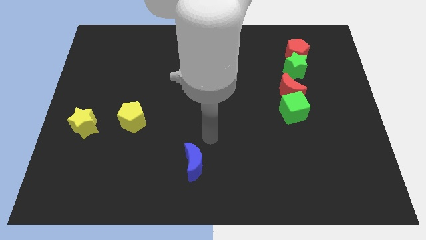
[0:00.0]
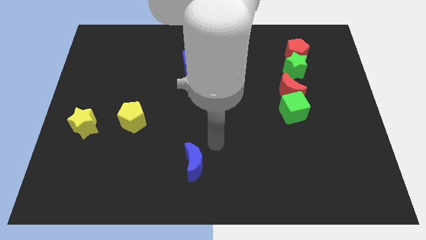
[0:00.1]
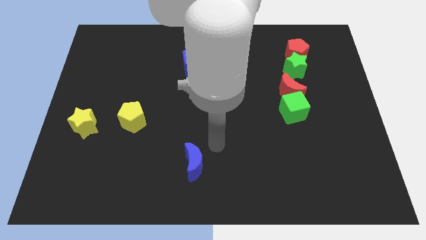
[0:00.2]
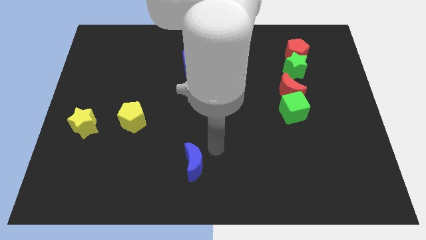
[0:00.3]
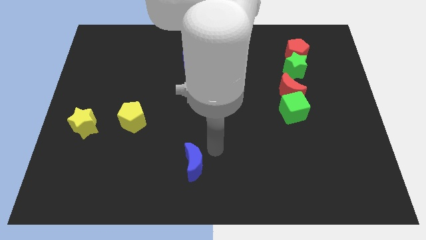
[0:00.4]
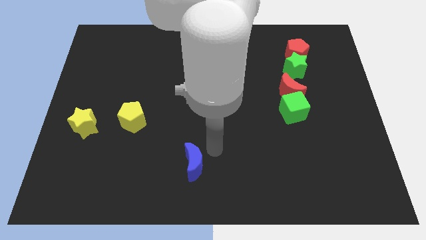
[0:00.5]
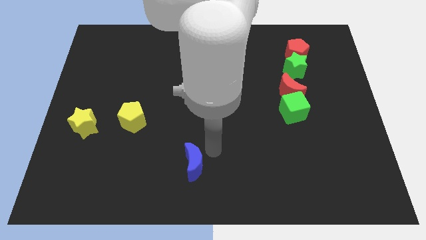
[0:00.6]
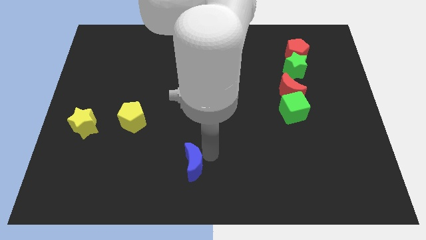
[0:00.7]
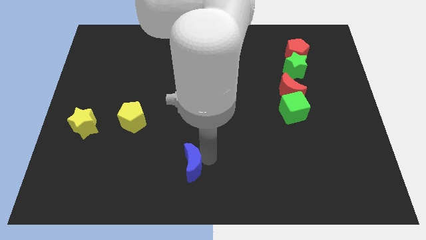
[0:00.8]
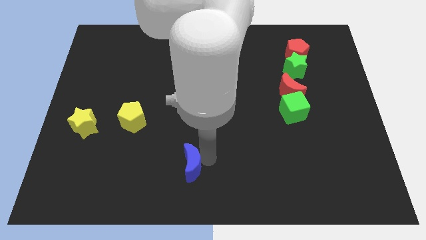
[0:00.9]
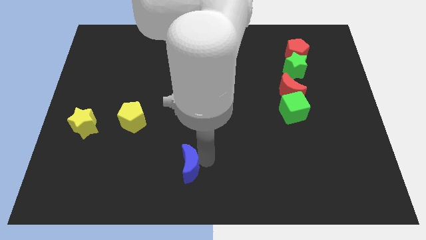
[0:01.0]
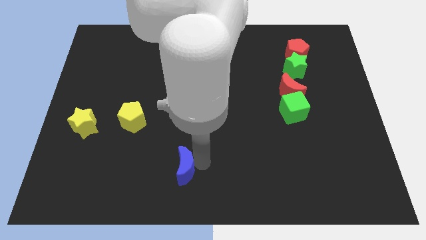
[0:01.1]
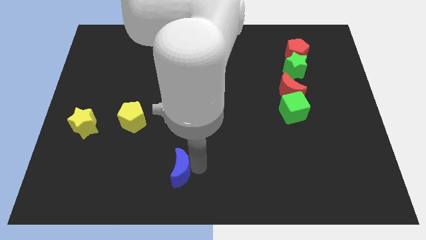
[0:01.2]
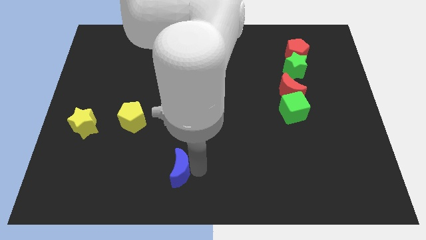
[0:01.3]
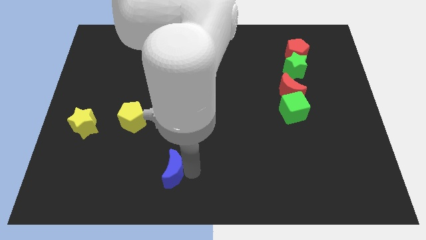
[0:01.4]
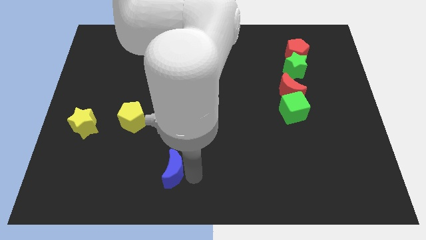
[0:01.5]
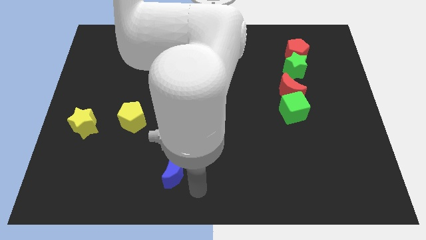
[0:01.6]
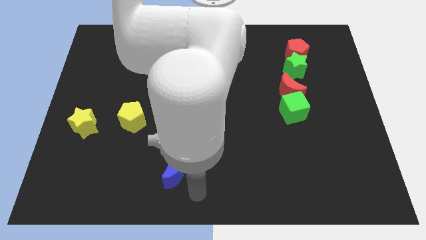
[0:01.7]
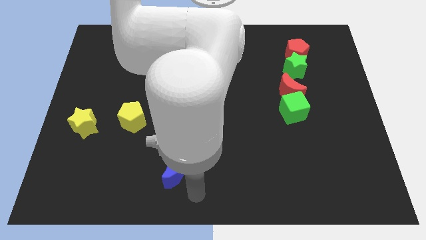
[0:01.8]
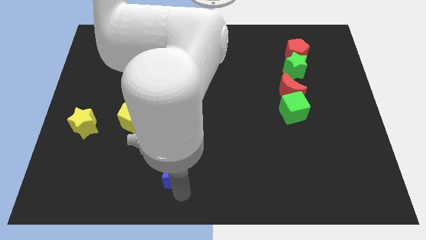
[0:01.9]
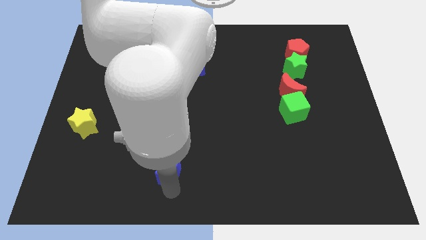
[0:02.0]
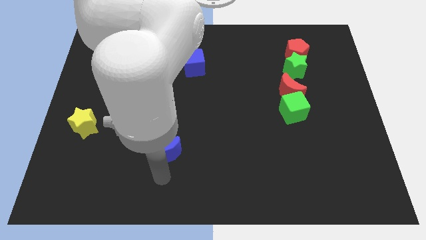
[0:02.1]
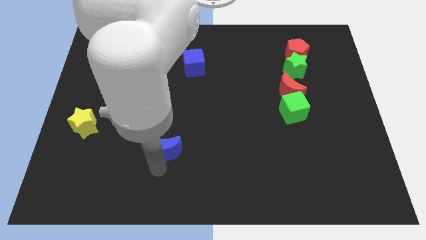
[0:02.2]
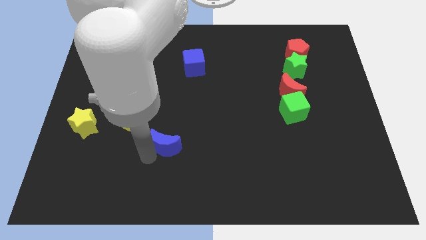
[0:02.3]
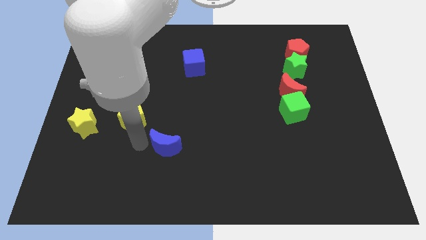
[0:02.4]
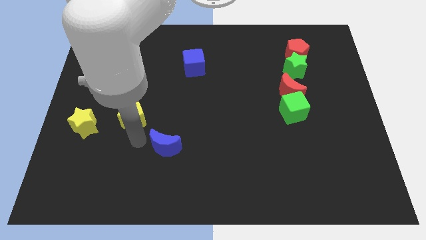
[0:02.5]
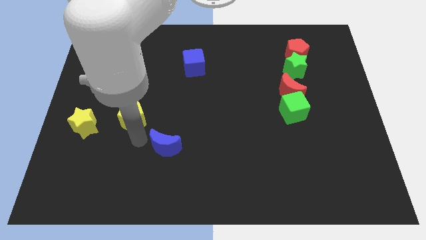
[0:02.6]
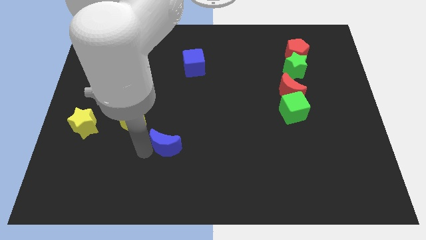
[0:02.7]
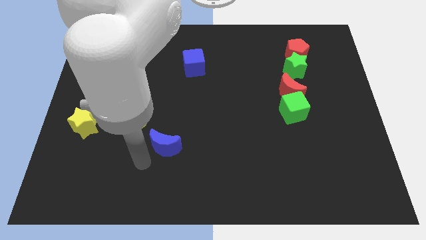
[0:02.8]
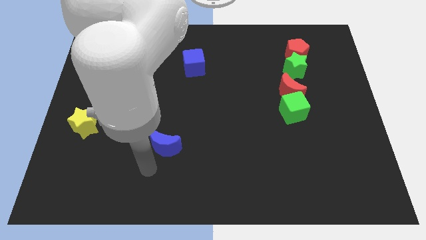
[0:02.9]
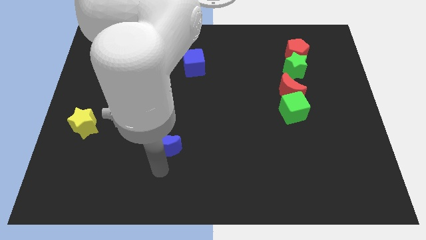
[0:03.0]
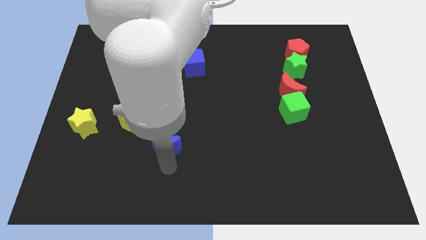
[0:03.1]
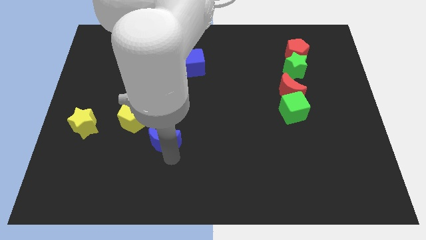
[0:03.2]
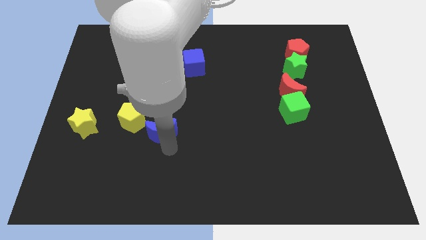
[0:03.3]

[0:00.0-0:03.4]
put the blue moon diagonally bottom right to the yellow pentagon

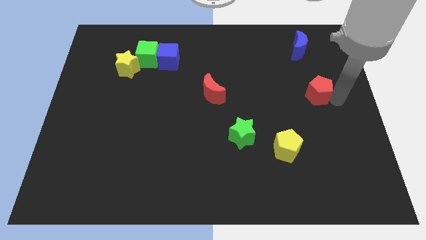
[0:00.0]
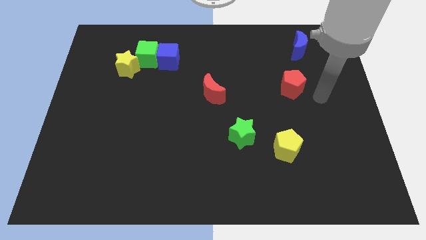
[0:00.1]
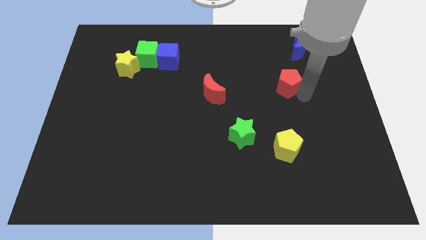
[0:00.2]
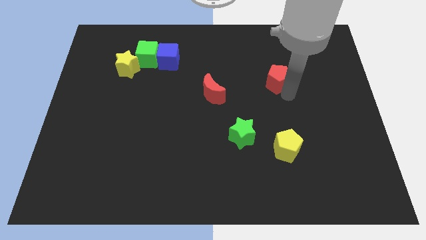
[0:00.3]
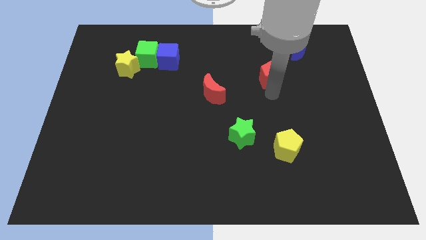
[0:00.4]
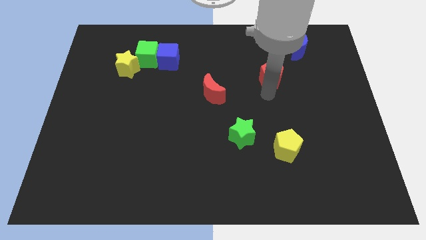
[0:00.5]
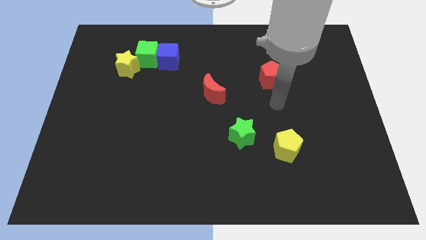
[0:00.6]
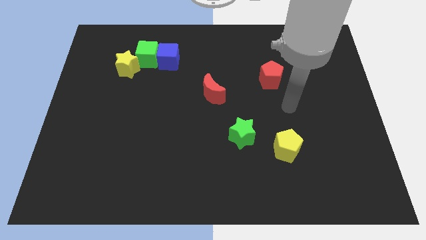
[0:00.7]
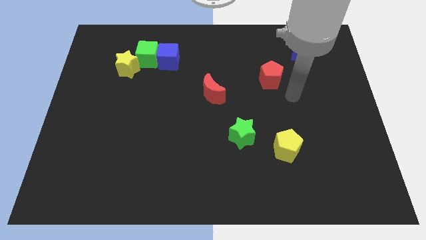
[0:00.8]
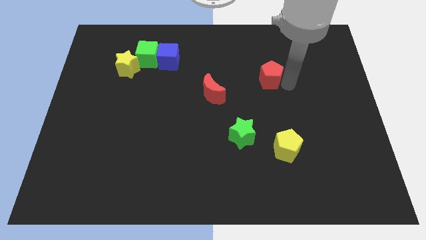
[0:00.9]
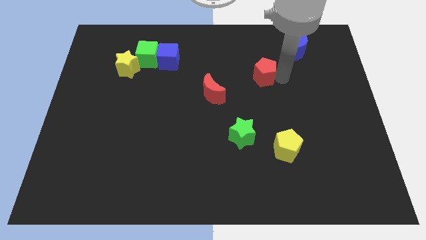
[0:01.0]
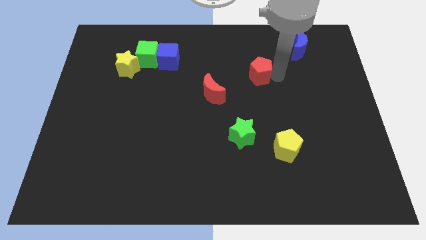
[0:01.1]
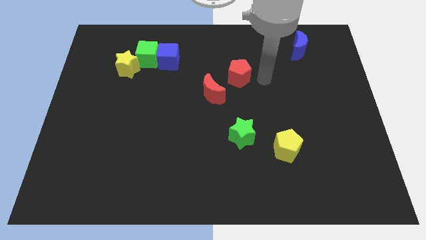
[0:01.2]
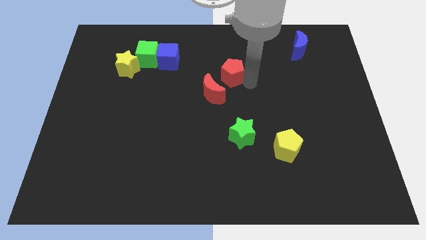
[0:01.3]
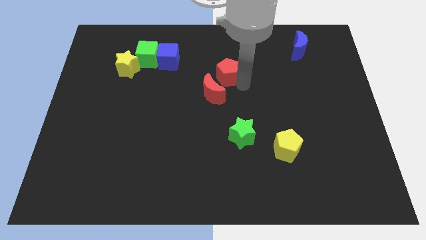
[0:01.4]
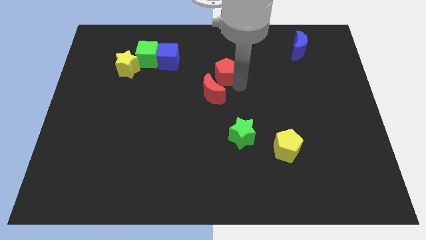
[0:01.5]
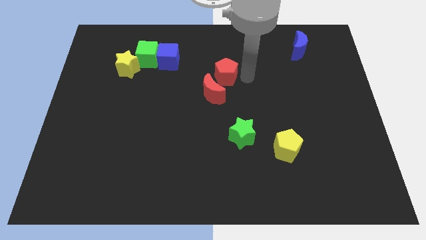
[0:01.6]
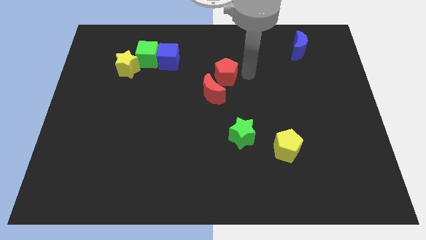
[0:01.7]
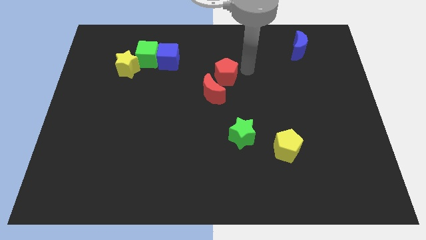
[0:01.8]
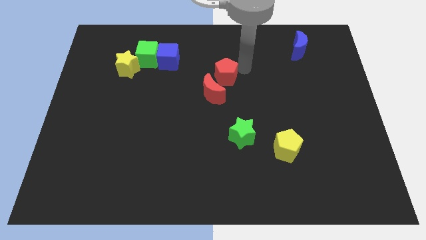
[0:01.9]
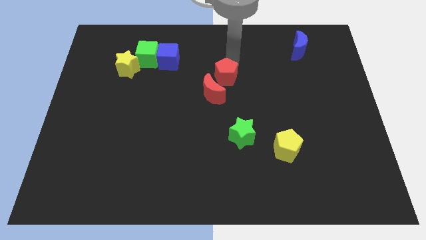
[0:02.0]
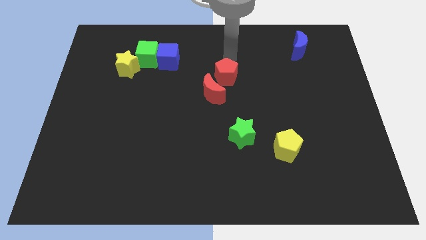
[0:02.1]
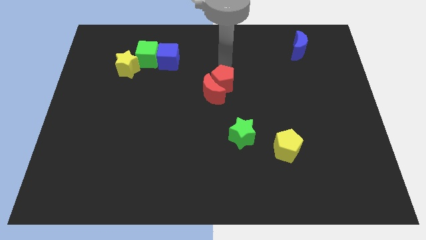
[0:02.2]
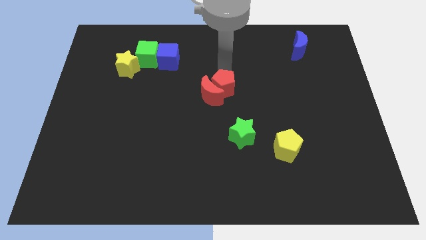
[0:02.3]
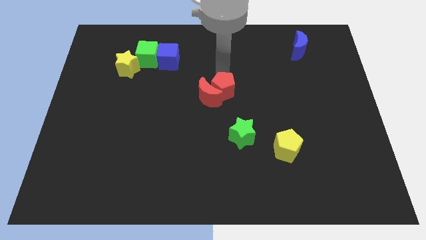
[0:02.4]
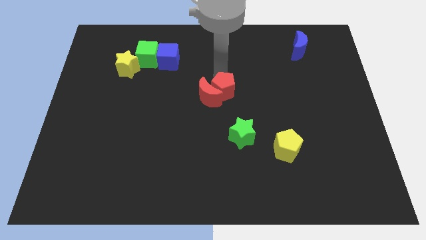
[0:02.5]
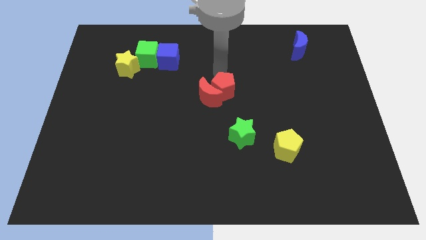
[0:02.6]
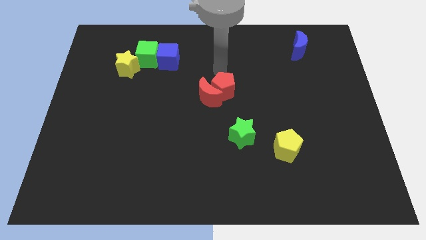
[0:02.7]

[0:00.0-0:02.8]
place the red pentagon above the red crescent slightly to the center of the board

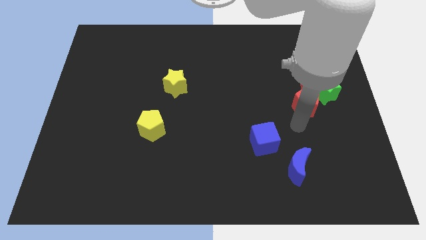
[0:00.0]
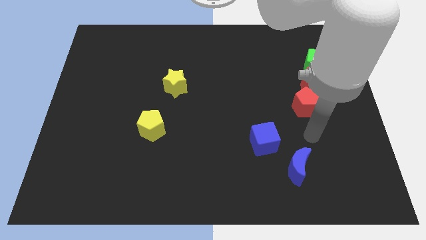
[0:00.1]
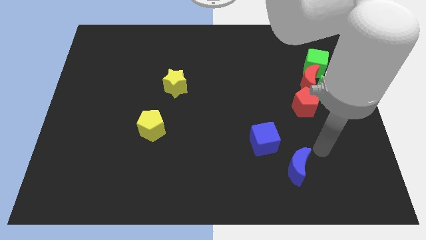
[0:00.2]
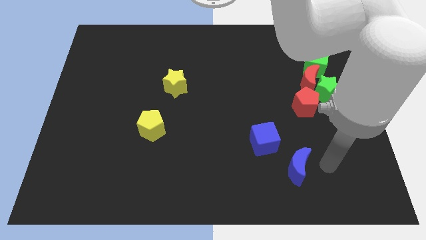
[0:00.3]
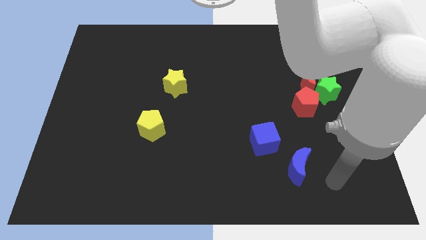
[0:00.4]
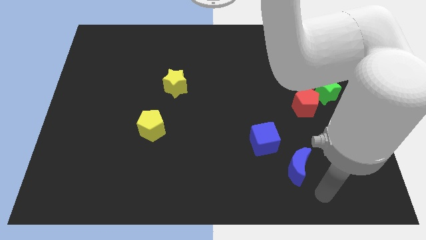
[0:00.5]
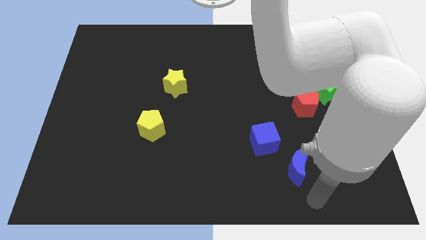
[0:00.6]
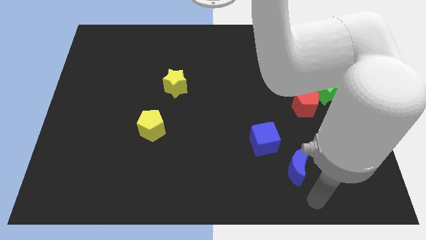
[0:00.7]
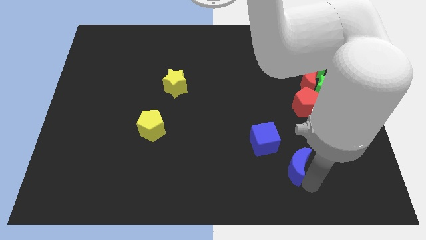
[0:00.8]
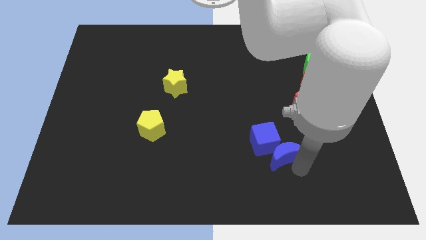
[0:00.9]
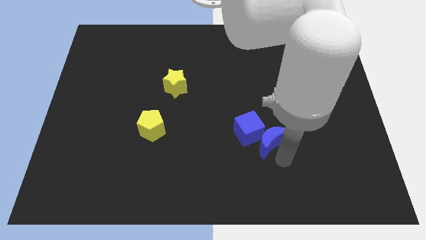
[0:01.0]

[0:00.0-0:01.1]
move blue moon close to the blue cube

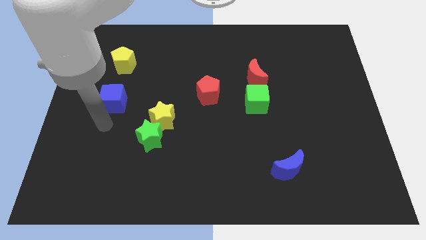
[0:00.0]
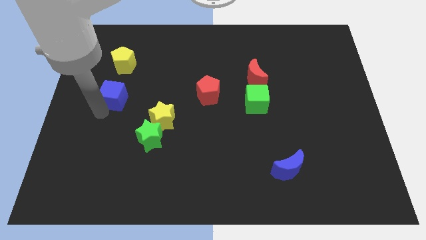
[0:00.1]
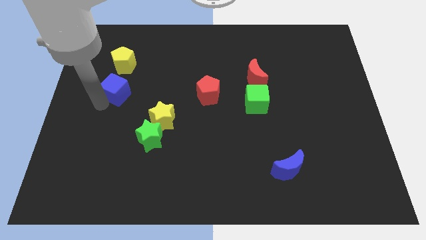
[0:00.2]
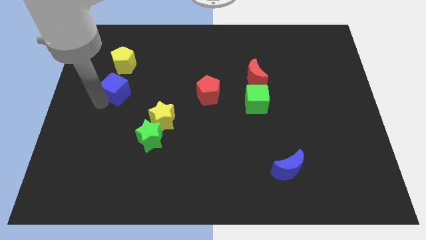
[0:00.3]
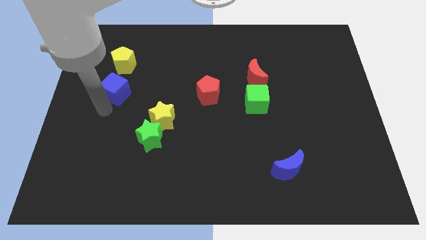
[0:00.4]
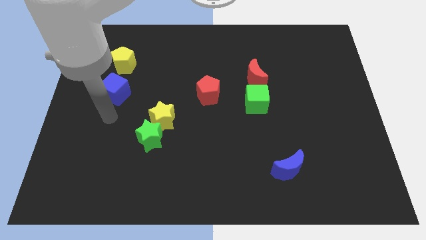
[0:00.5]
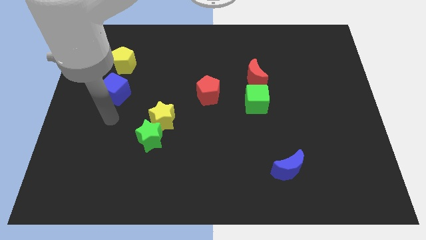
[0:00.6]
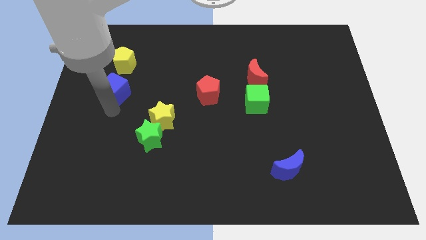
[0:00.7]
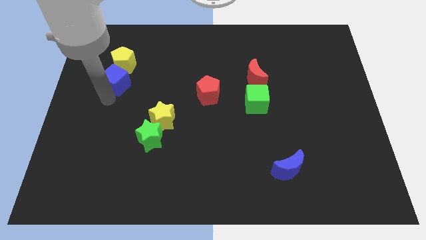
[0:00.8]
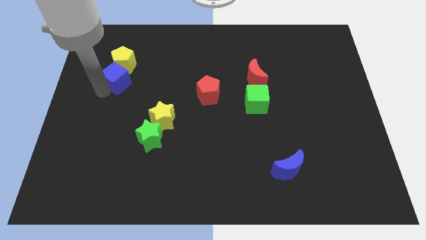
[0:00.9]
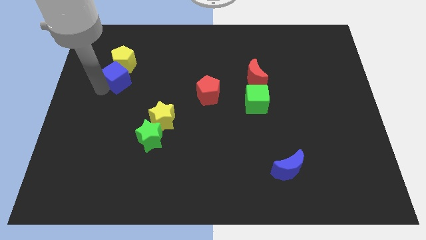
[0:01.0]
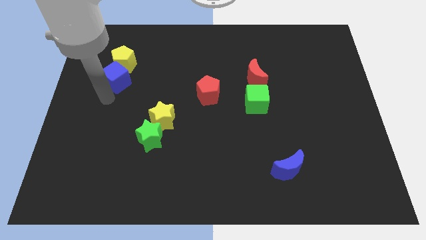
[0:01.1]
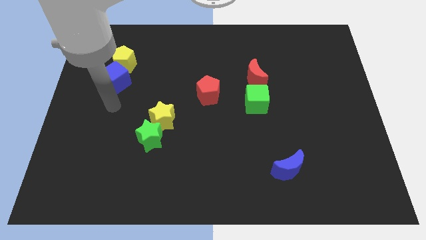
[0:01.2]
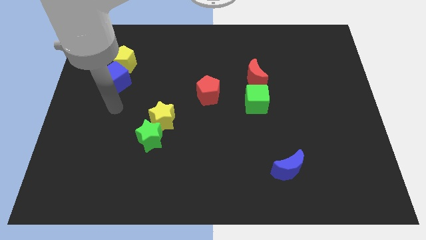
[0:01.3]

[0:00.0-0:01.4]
push the blue cube below the yellow pentagon

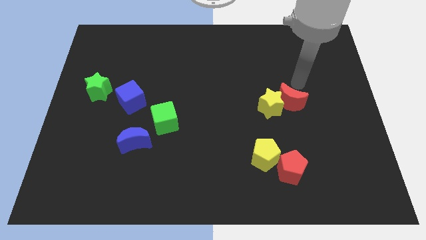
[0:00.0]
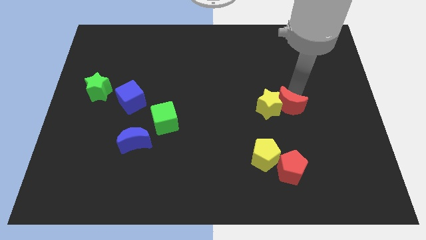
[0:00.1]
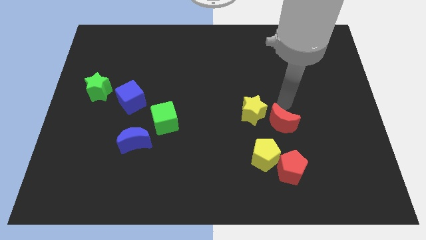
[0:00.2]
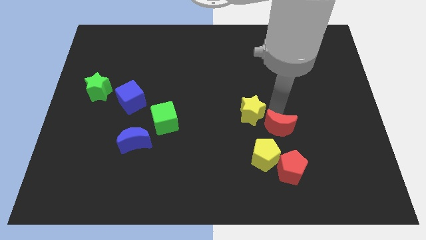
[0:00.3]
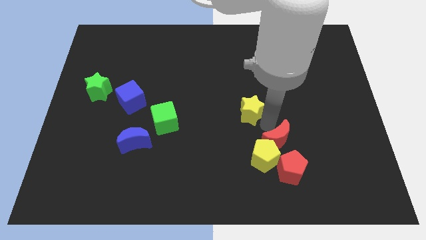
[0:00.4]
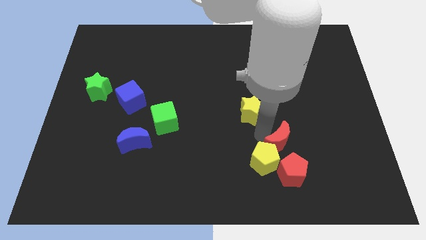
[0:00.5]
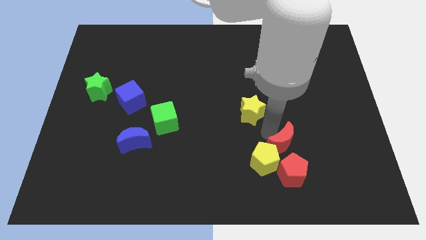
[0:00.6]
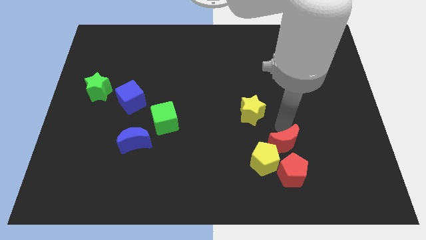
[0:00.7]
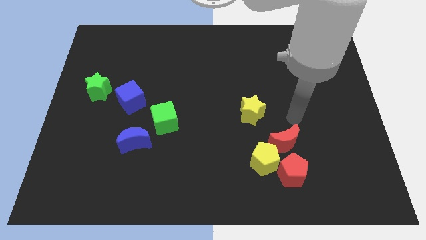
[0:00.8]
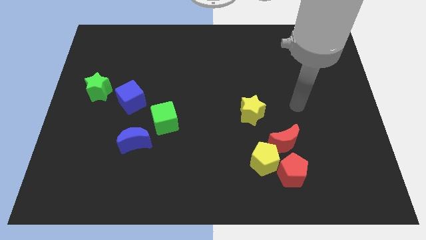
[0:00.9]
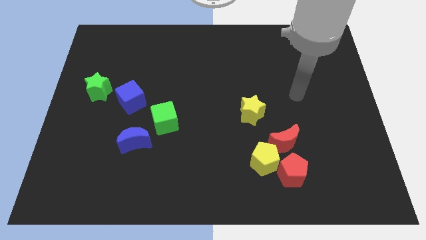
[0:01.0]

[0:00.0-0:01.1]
separate yellow star and red moon
